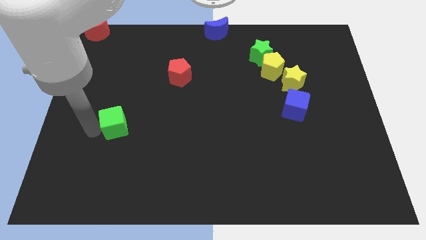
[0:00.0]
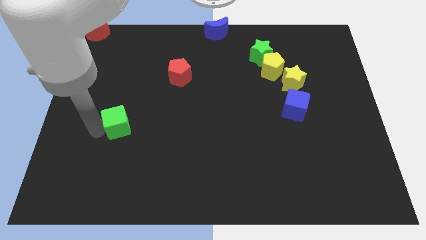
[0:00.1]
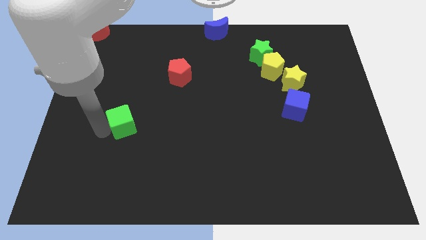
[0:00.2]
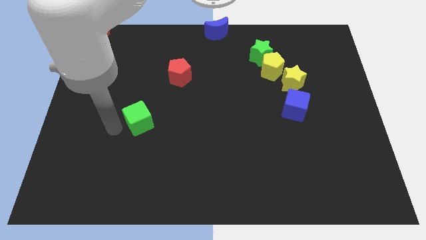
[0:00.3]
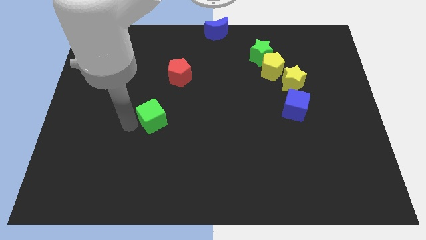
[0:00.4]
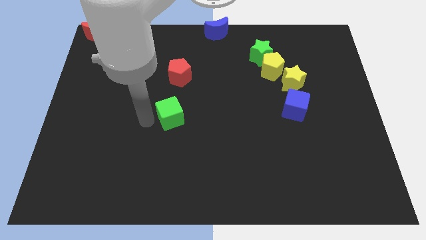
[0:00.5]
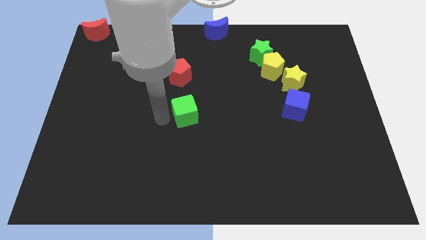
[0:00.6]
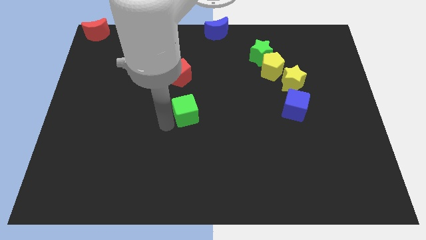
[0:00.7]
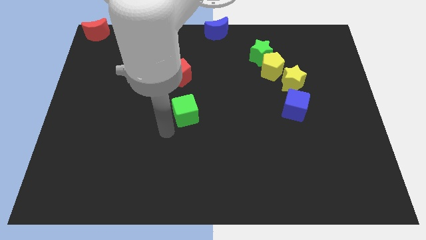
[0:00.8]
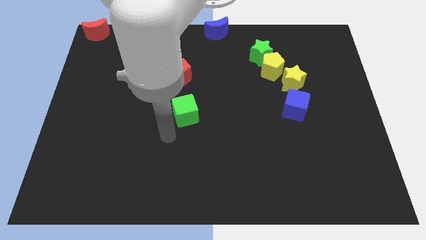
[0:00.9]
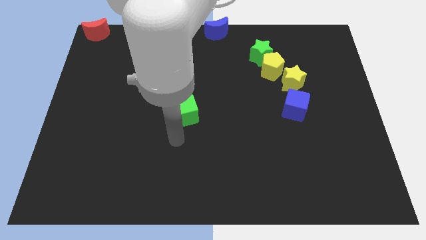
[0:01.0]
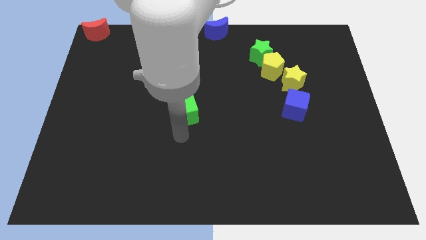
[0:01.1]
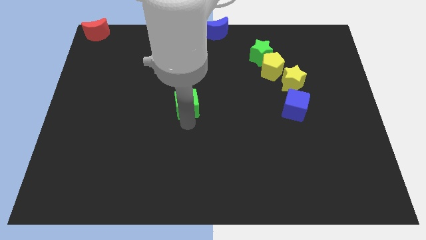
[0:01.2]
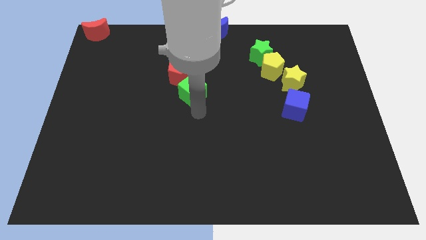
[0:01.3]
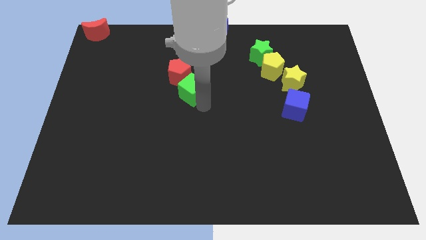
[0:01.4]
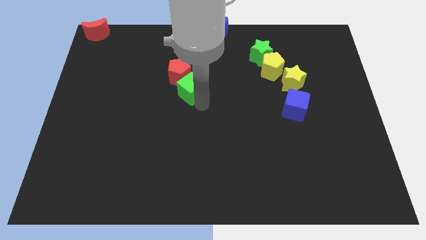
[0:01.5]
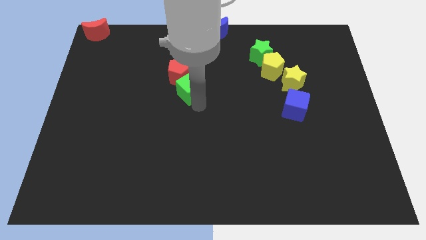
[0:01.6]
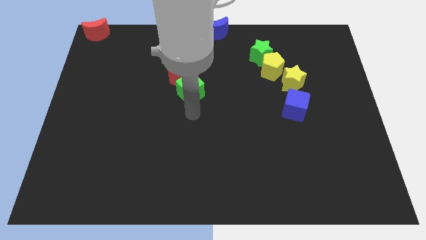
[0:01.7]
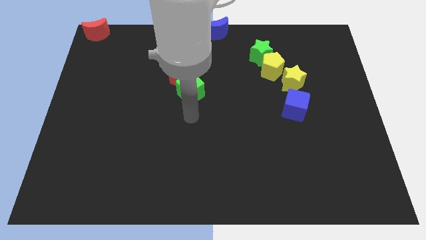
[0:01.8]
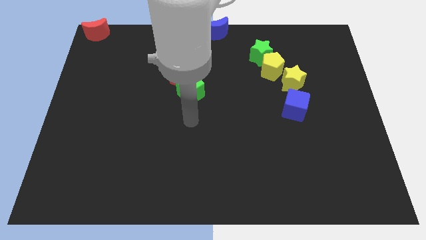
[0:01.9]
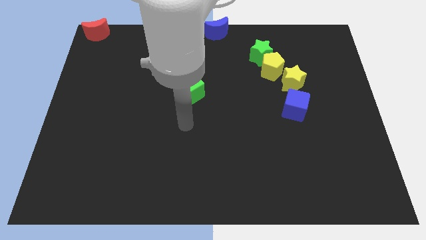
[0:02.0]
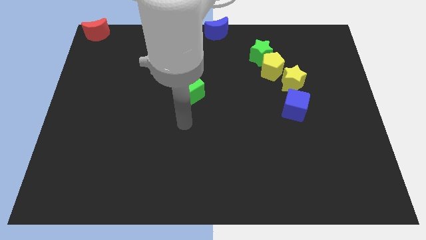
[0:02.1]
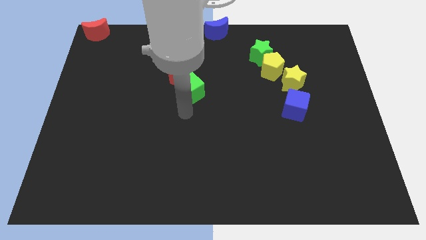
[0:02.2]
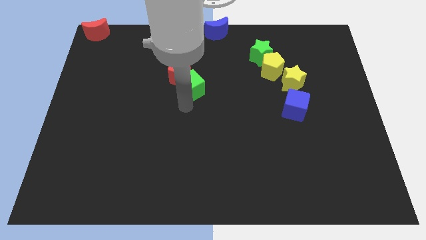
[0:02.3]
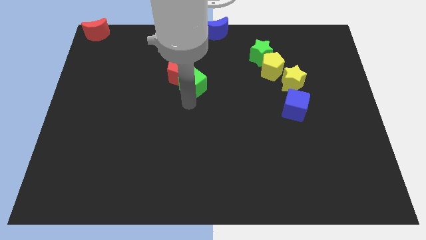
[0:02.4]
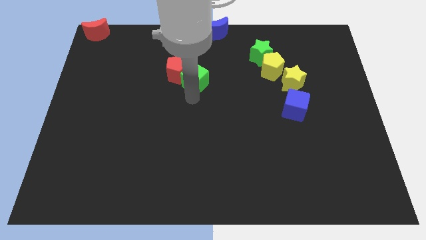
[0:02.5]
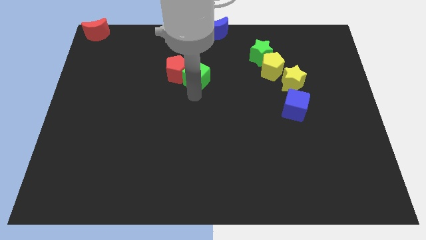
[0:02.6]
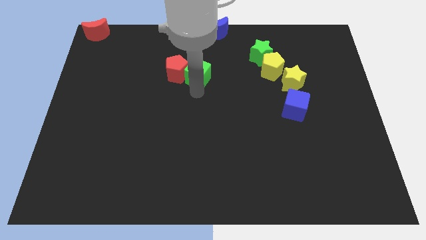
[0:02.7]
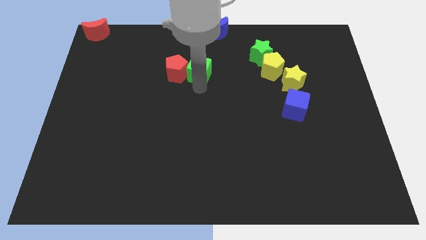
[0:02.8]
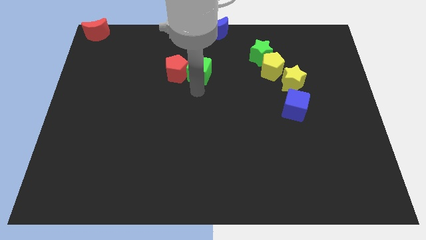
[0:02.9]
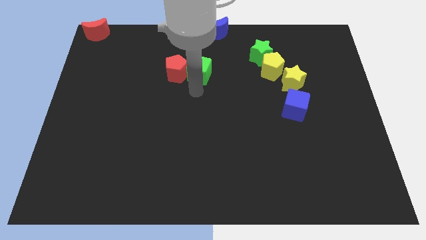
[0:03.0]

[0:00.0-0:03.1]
push the green cube into the red pentagon

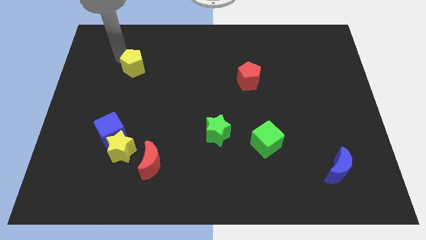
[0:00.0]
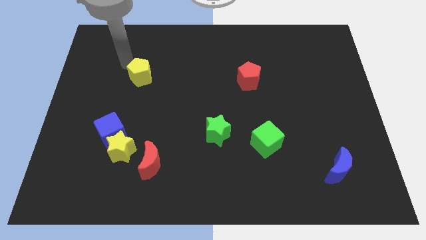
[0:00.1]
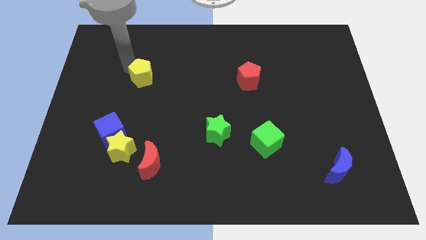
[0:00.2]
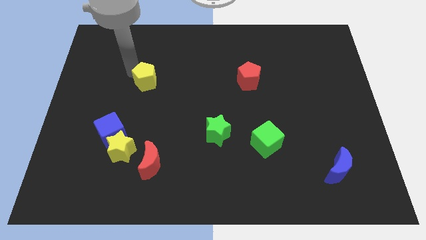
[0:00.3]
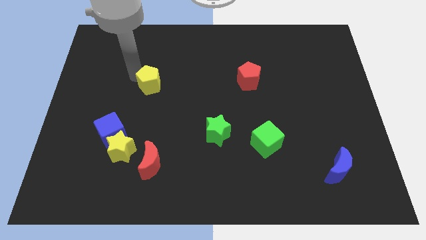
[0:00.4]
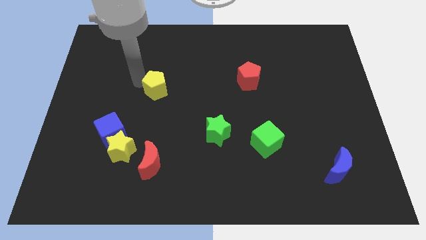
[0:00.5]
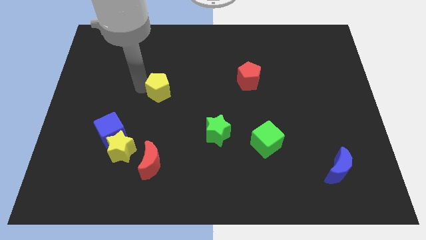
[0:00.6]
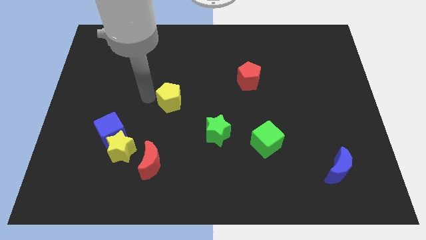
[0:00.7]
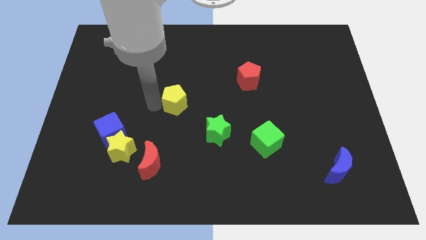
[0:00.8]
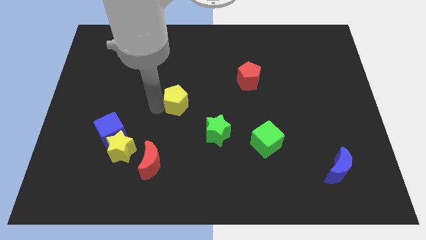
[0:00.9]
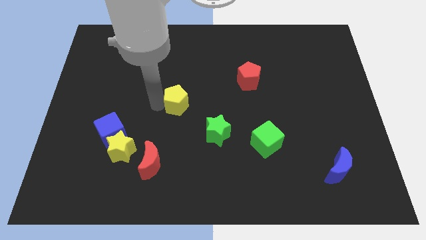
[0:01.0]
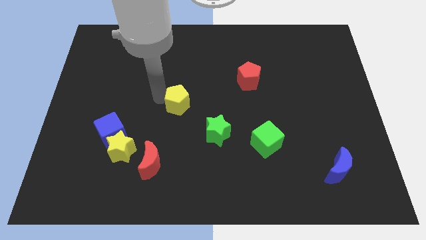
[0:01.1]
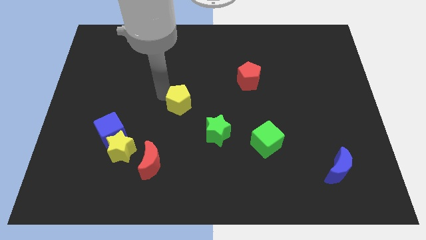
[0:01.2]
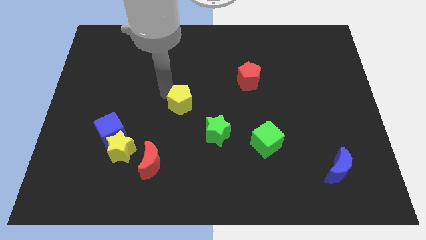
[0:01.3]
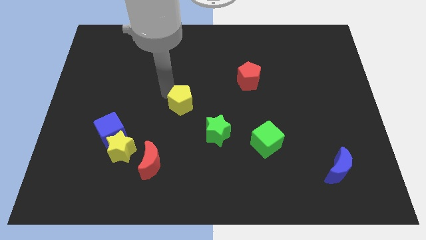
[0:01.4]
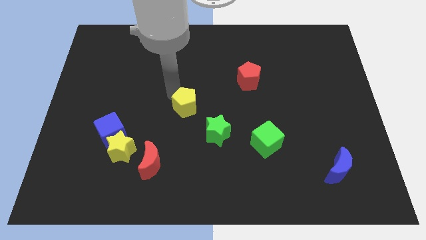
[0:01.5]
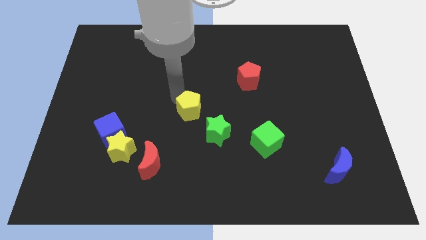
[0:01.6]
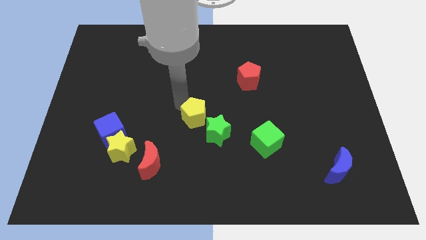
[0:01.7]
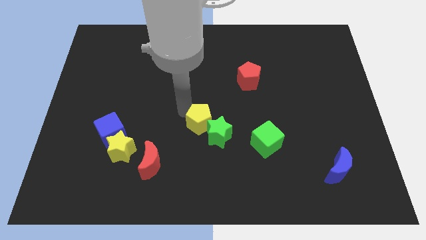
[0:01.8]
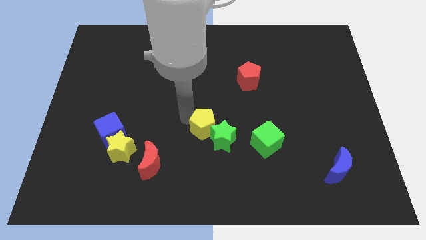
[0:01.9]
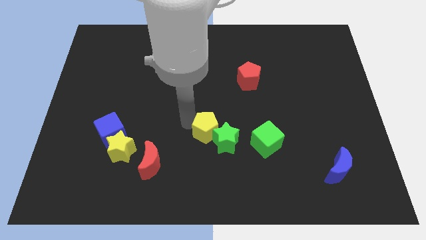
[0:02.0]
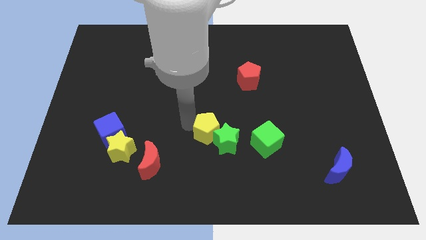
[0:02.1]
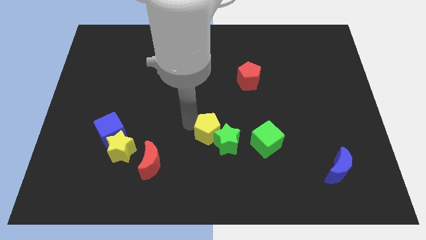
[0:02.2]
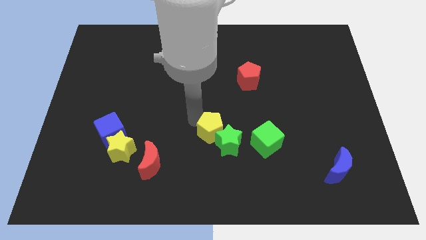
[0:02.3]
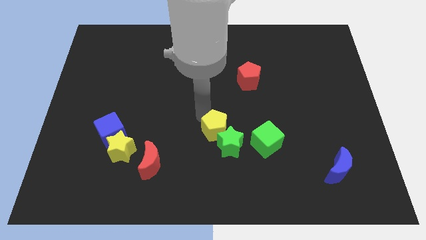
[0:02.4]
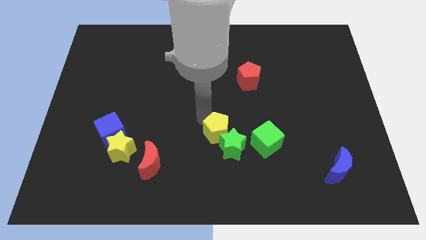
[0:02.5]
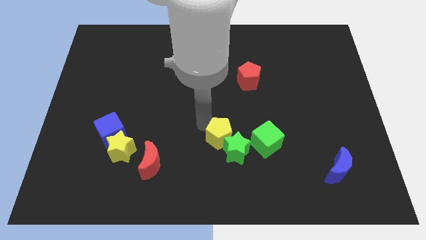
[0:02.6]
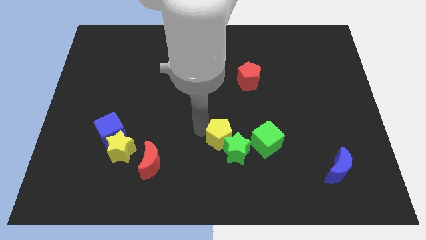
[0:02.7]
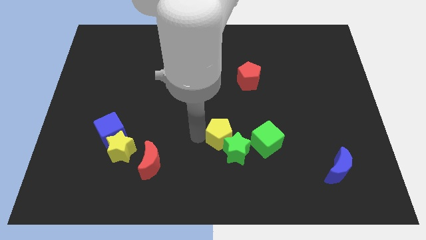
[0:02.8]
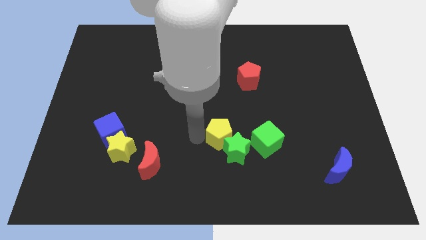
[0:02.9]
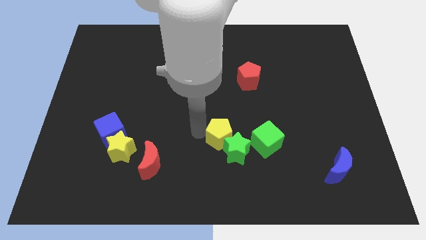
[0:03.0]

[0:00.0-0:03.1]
push the yellow pentagon into the green star

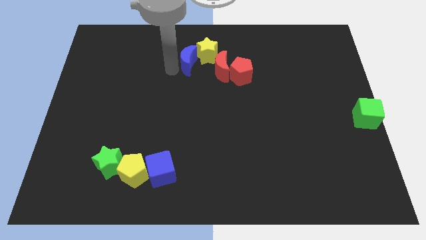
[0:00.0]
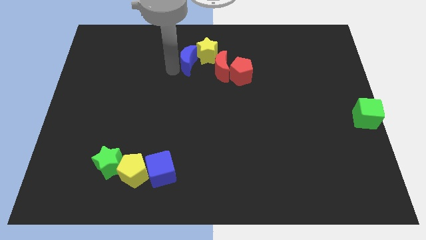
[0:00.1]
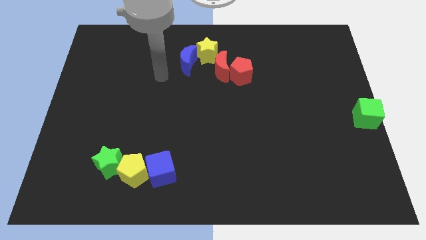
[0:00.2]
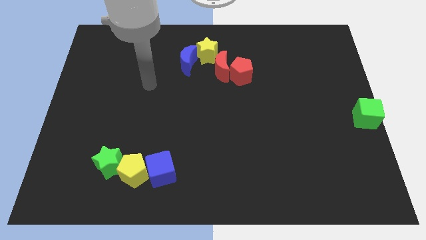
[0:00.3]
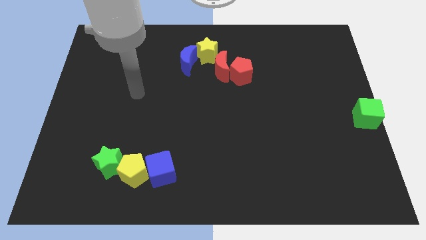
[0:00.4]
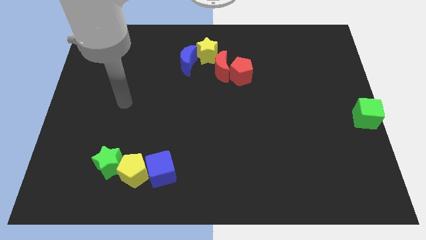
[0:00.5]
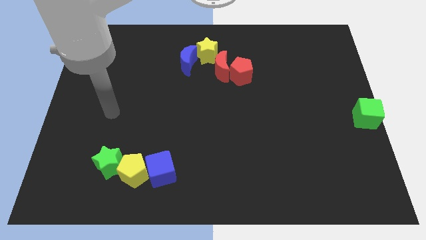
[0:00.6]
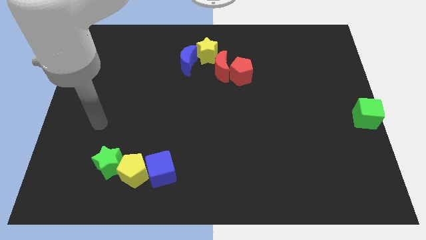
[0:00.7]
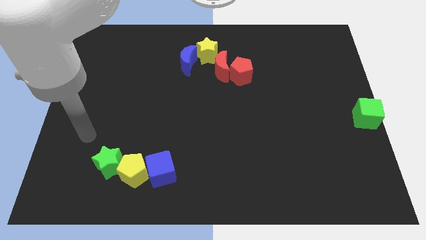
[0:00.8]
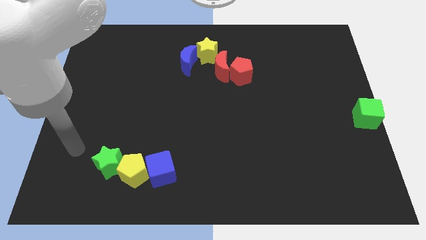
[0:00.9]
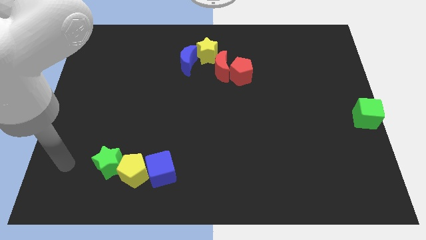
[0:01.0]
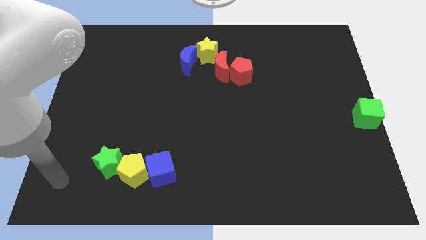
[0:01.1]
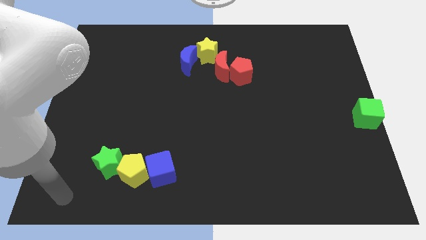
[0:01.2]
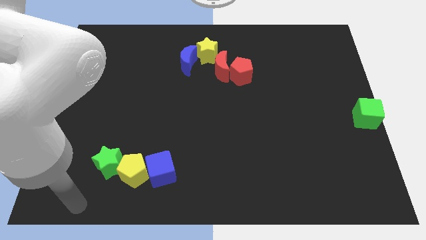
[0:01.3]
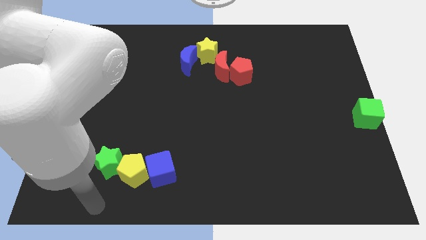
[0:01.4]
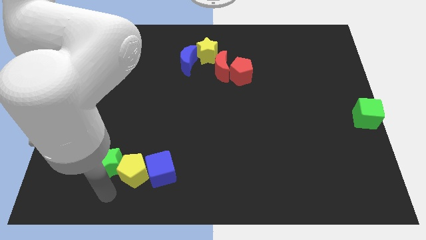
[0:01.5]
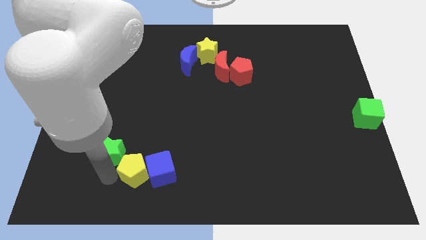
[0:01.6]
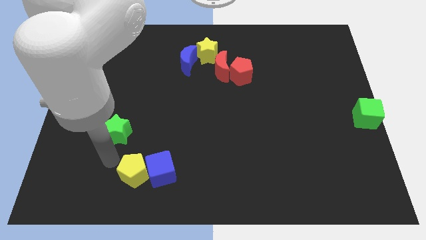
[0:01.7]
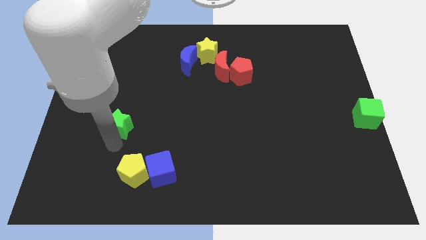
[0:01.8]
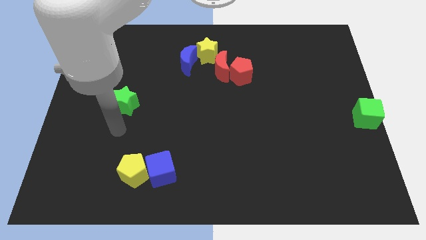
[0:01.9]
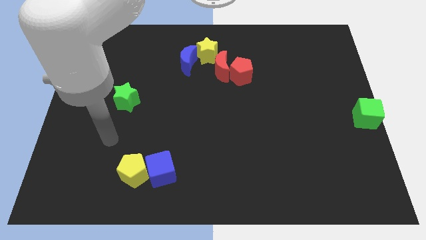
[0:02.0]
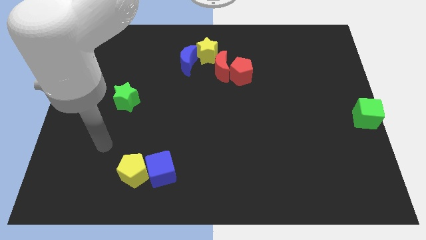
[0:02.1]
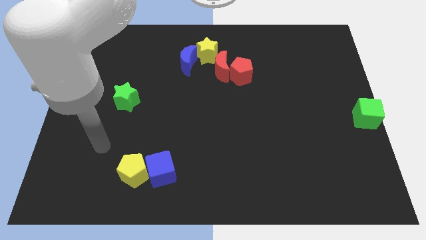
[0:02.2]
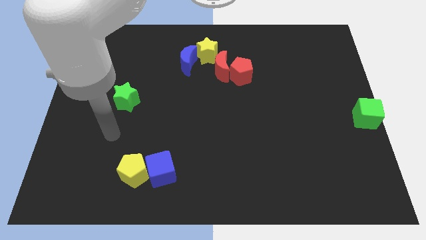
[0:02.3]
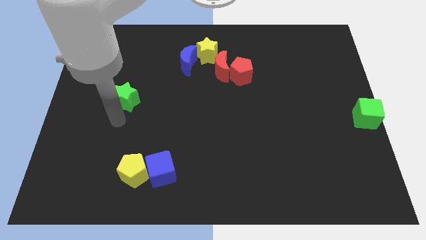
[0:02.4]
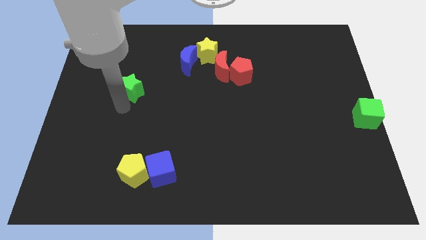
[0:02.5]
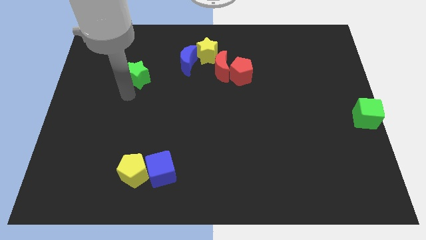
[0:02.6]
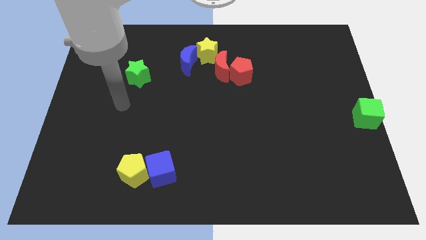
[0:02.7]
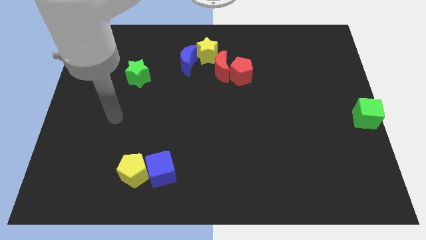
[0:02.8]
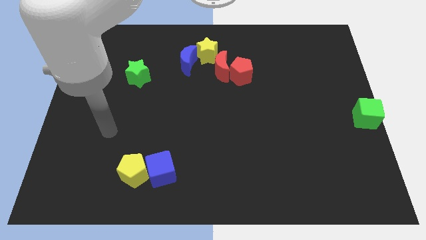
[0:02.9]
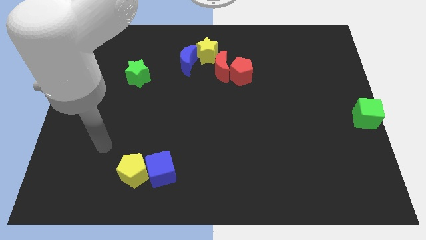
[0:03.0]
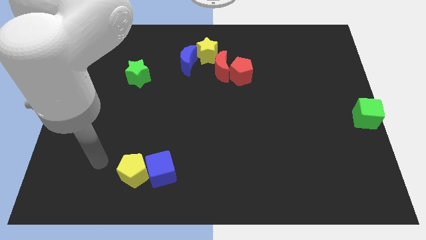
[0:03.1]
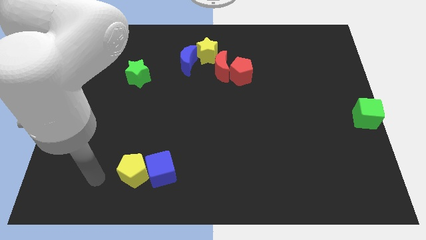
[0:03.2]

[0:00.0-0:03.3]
place the green star above the yellow pentagon
